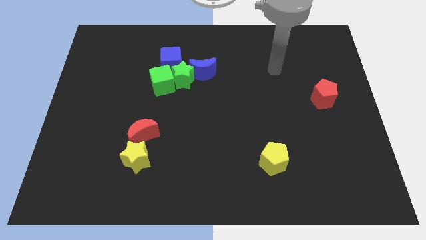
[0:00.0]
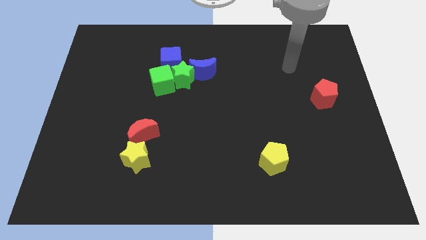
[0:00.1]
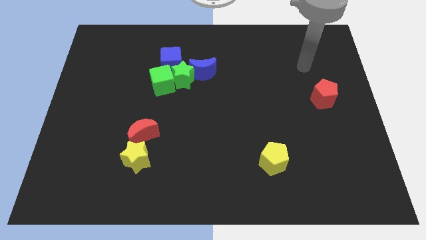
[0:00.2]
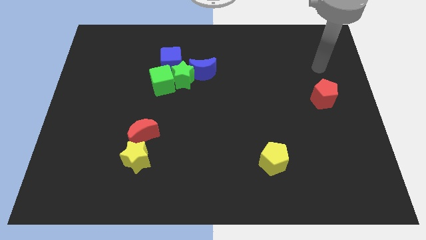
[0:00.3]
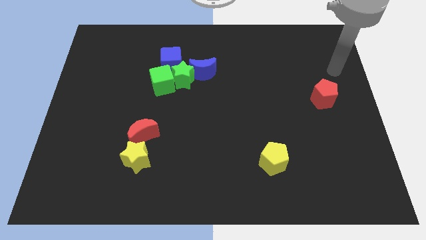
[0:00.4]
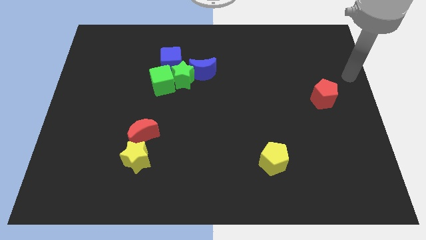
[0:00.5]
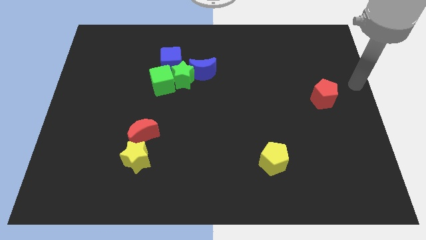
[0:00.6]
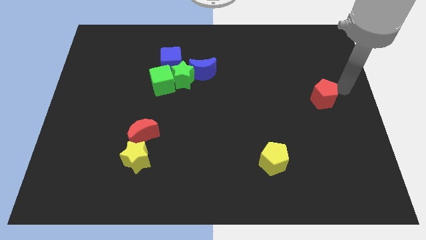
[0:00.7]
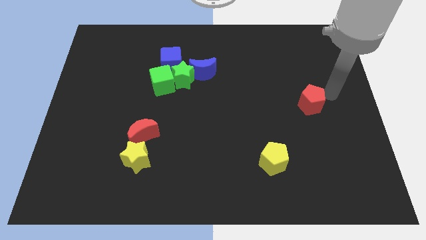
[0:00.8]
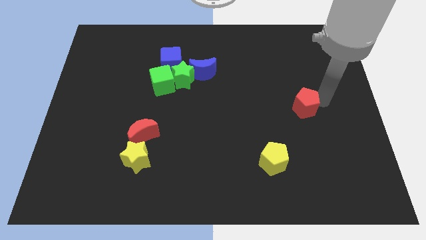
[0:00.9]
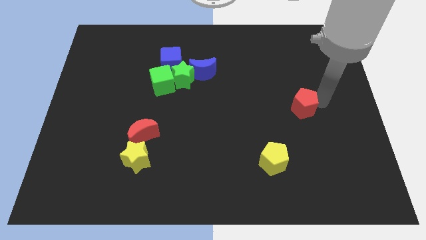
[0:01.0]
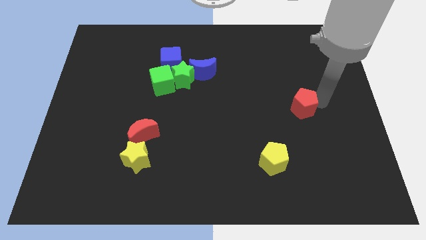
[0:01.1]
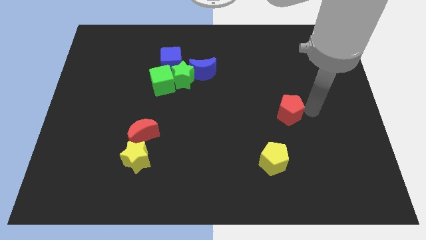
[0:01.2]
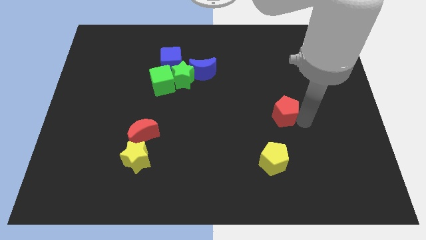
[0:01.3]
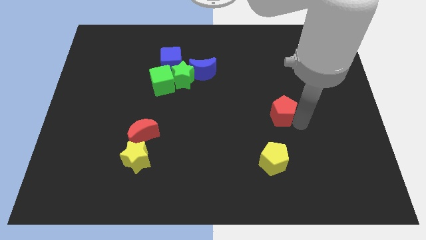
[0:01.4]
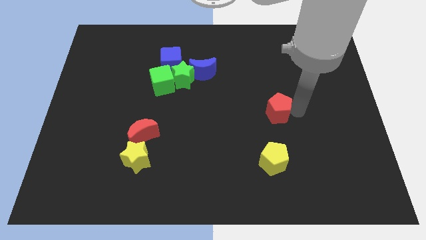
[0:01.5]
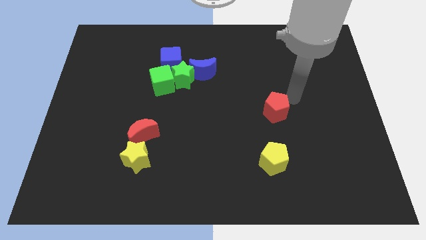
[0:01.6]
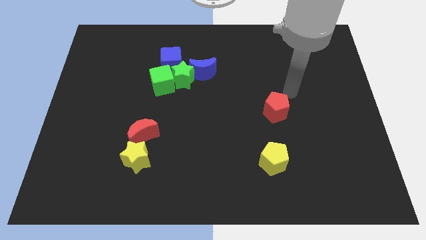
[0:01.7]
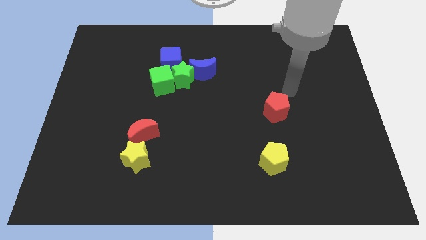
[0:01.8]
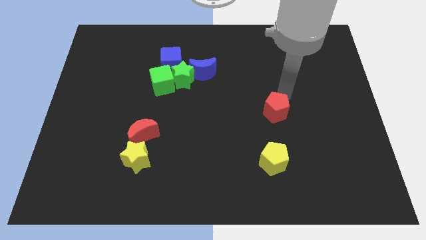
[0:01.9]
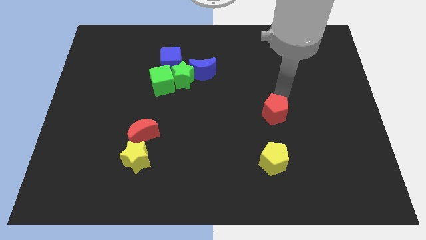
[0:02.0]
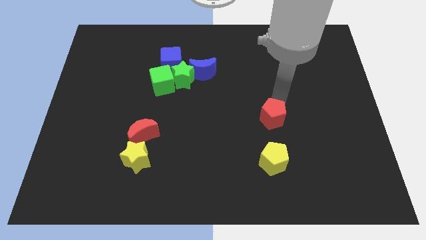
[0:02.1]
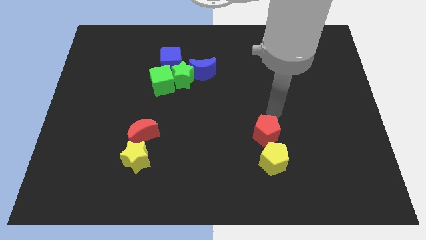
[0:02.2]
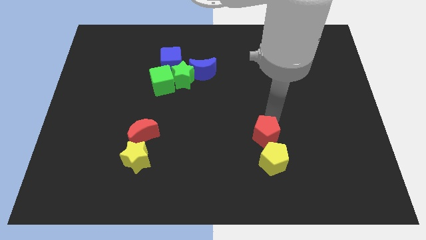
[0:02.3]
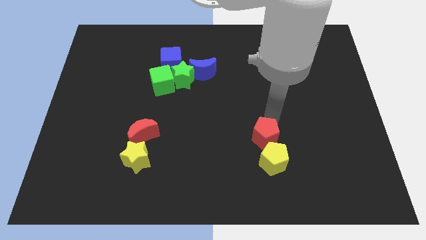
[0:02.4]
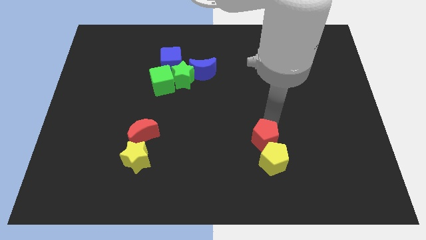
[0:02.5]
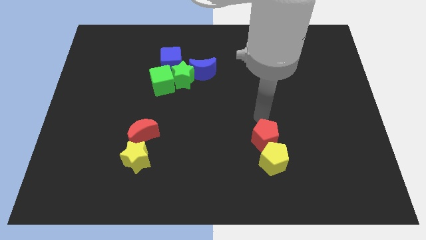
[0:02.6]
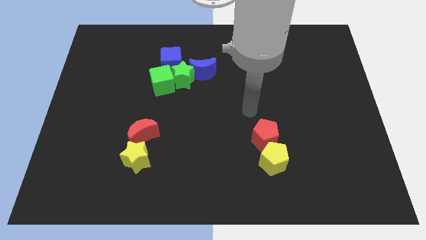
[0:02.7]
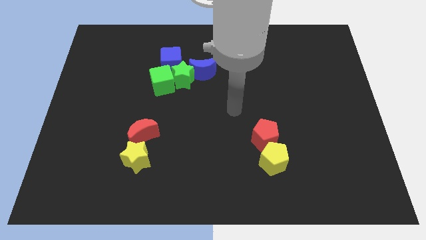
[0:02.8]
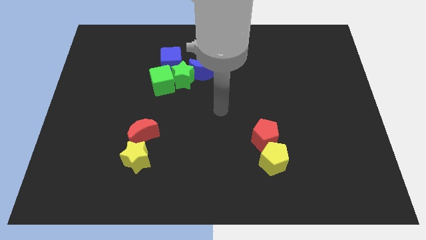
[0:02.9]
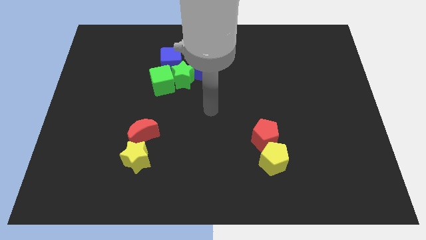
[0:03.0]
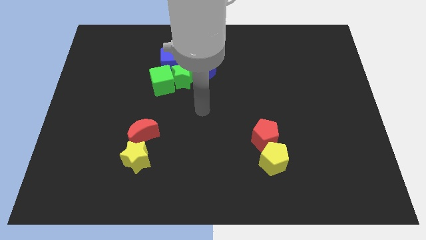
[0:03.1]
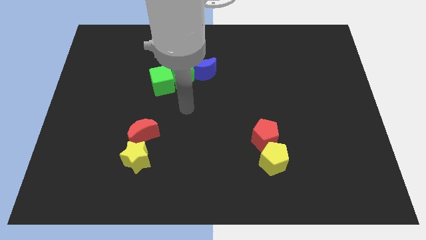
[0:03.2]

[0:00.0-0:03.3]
move the red pentagon to the top of the yellow pentagon

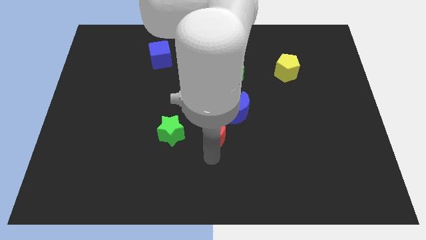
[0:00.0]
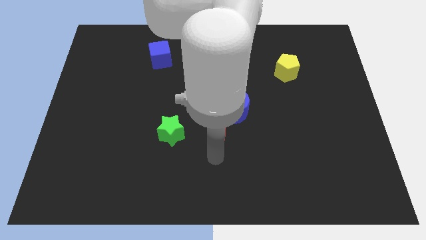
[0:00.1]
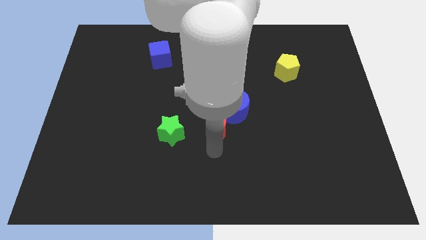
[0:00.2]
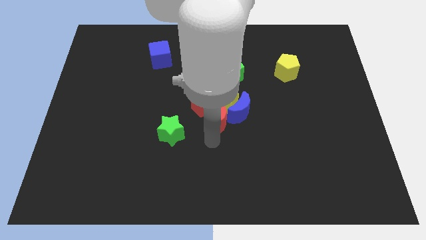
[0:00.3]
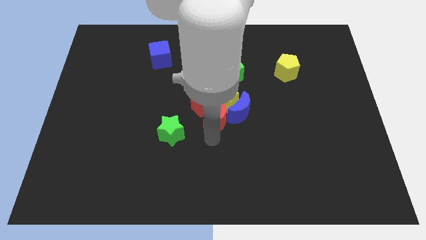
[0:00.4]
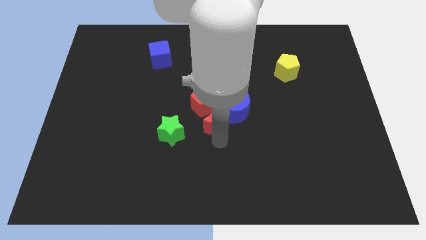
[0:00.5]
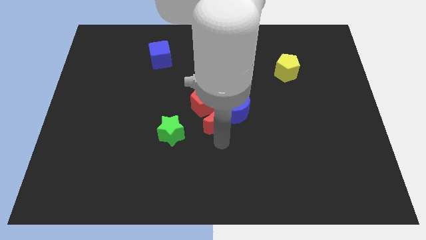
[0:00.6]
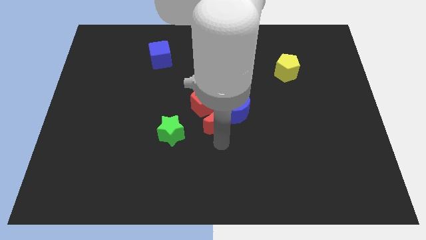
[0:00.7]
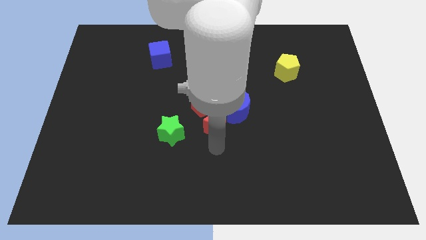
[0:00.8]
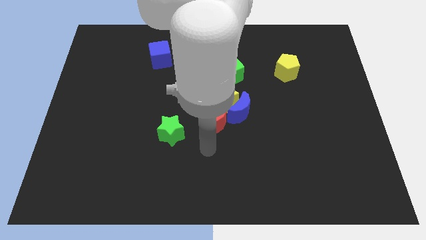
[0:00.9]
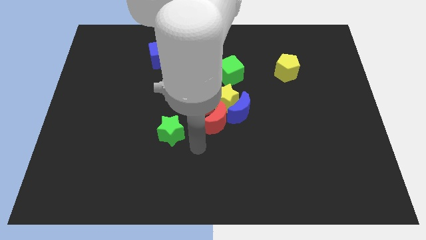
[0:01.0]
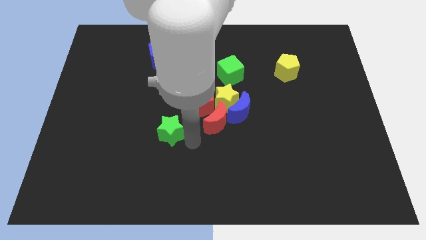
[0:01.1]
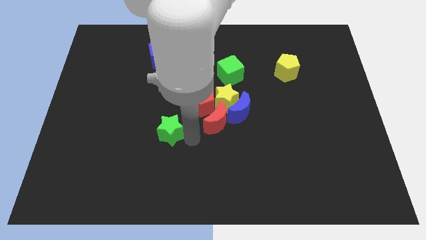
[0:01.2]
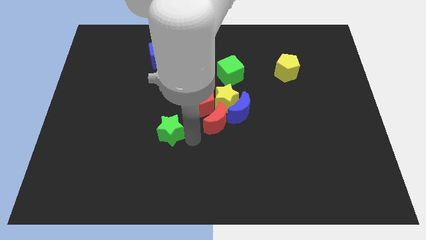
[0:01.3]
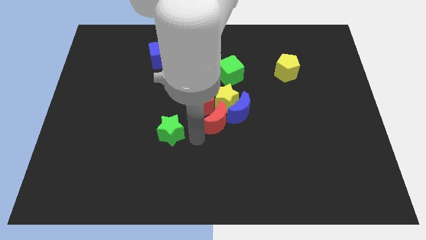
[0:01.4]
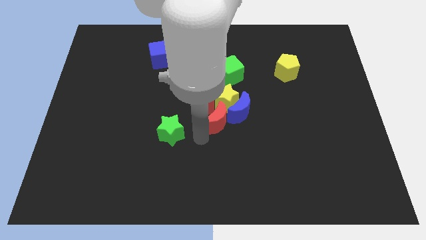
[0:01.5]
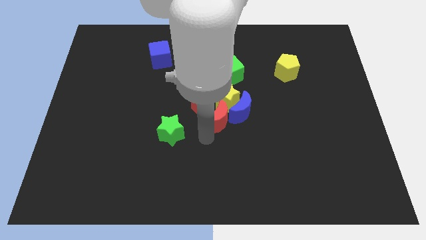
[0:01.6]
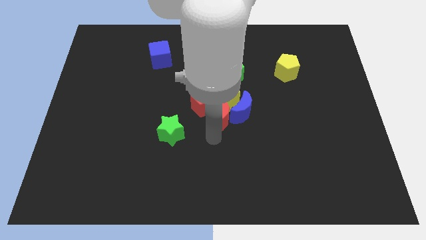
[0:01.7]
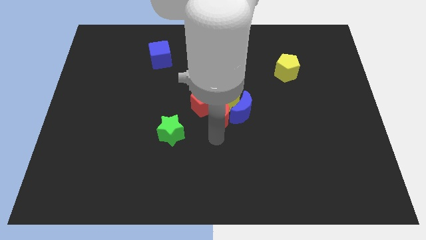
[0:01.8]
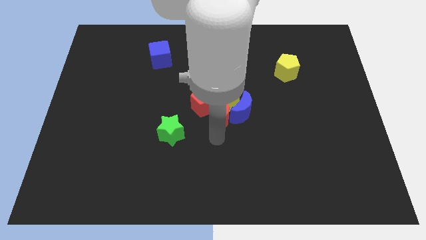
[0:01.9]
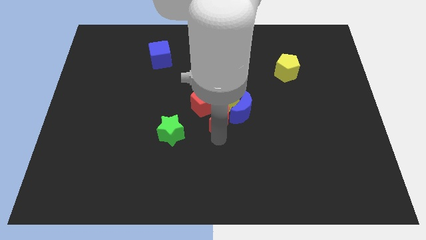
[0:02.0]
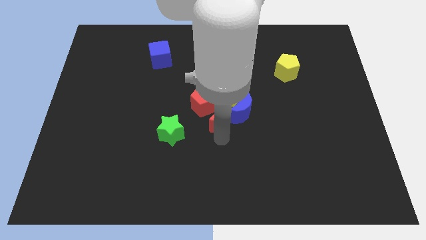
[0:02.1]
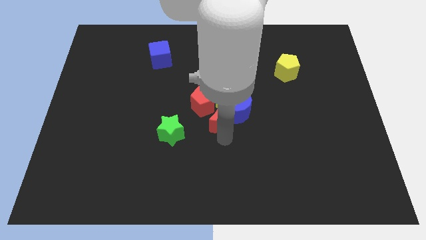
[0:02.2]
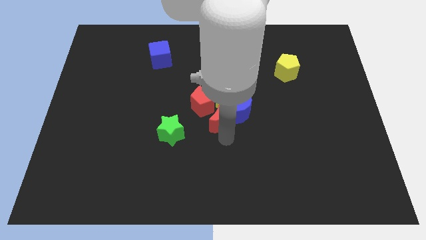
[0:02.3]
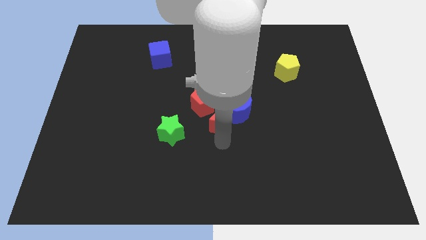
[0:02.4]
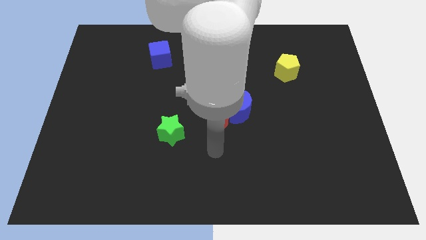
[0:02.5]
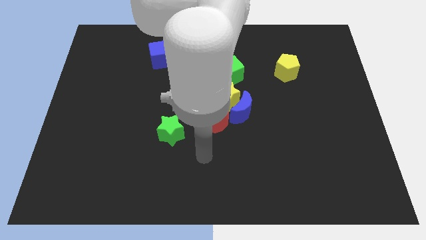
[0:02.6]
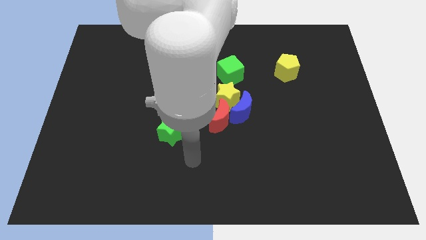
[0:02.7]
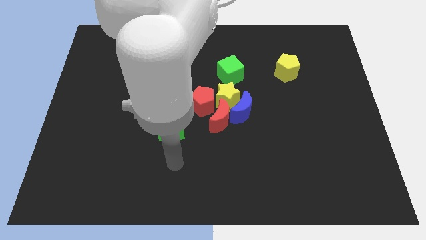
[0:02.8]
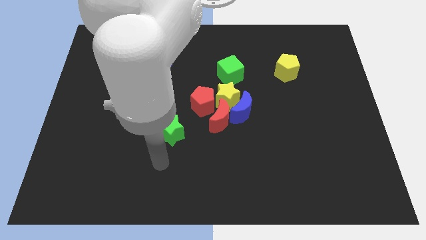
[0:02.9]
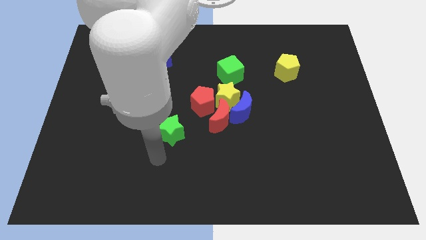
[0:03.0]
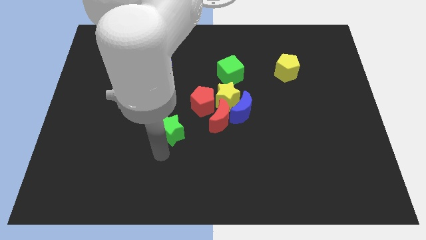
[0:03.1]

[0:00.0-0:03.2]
move the red moon below the red pentagon

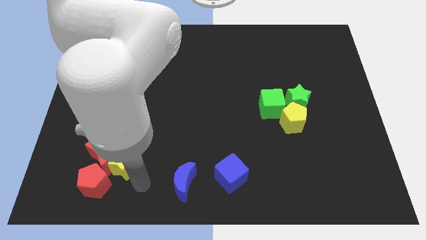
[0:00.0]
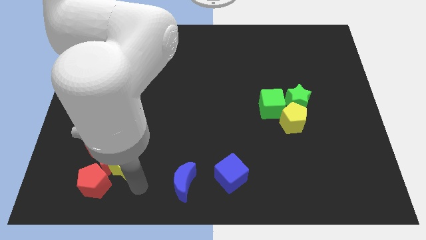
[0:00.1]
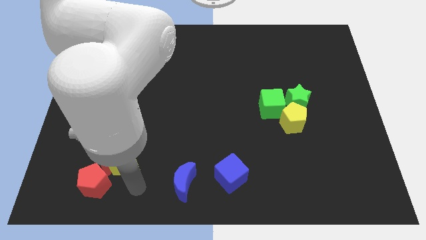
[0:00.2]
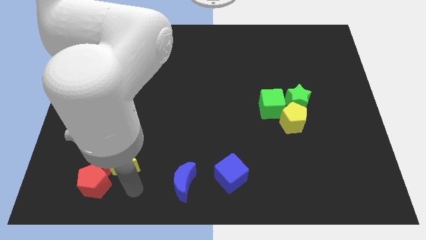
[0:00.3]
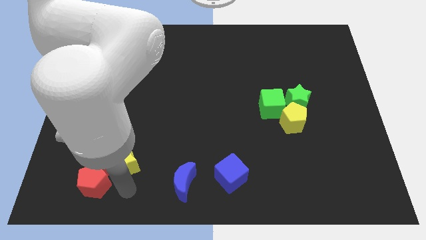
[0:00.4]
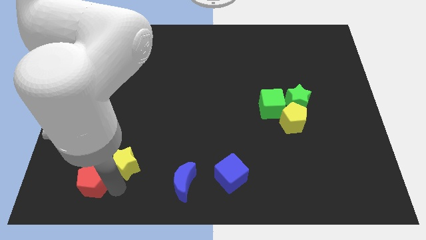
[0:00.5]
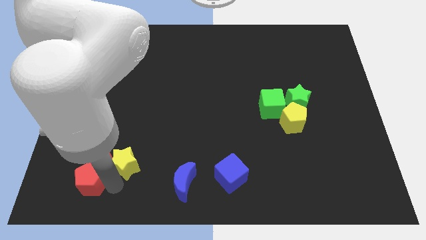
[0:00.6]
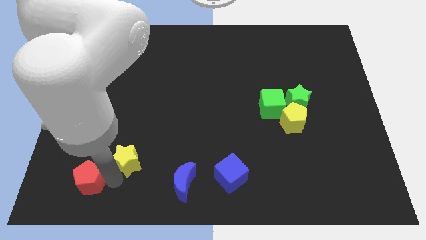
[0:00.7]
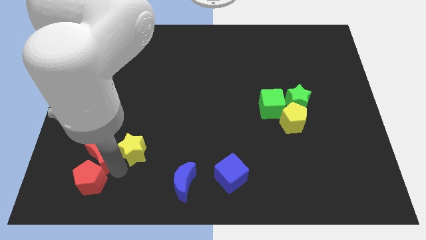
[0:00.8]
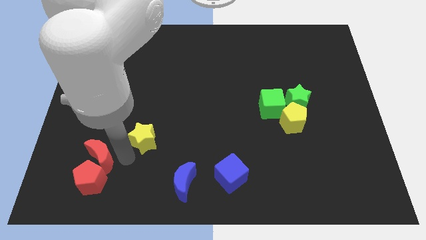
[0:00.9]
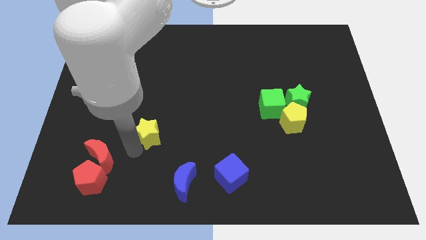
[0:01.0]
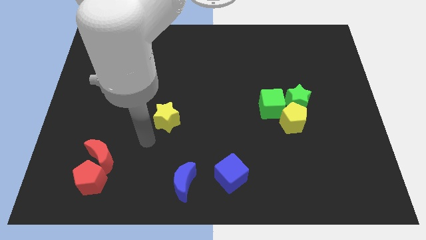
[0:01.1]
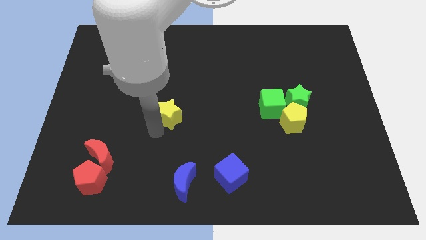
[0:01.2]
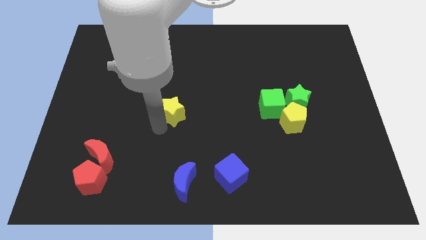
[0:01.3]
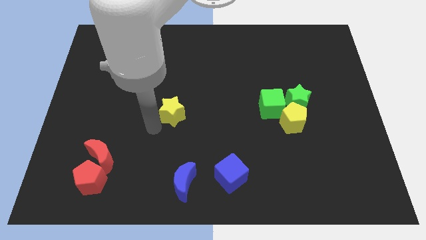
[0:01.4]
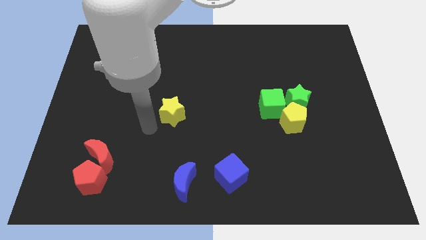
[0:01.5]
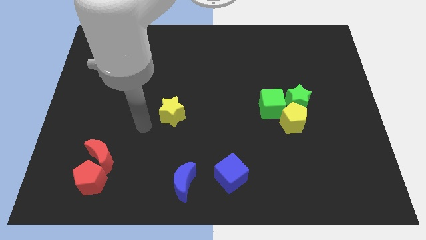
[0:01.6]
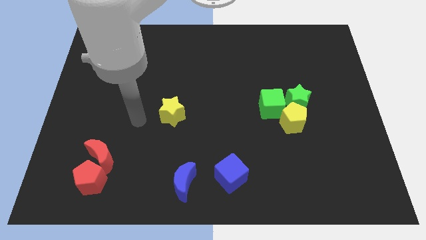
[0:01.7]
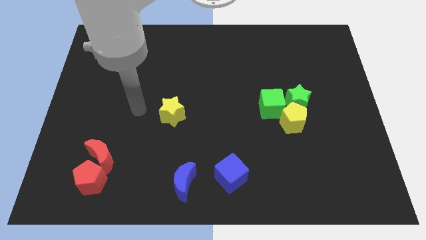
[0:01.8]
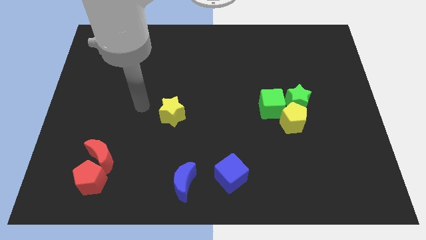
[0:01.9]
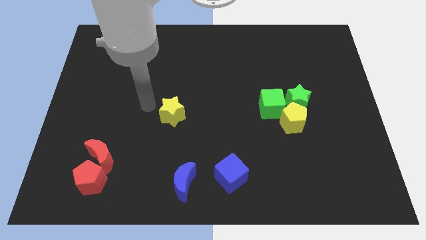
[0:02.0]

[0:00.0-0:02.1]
move the yellow star towards the center

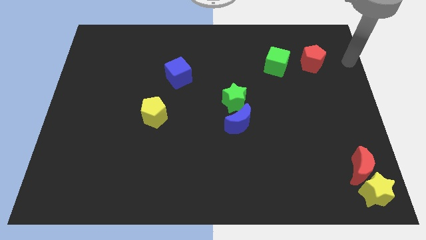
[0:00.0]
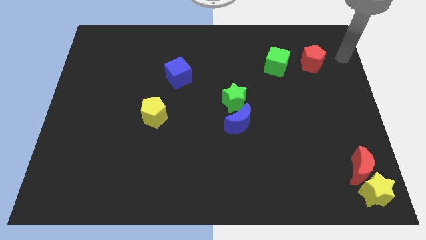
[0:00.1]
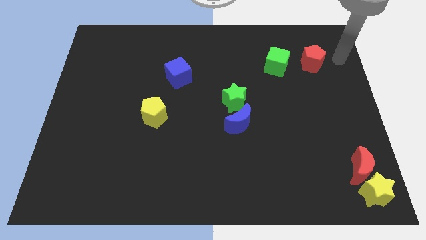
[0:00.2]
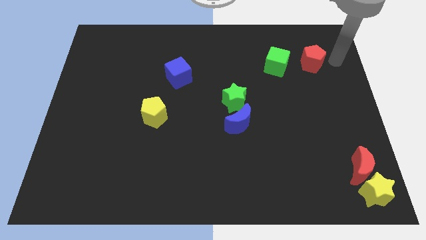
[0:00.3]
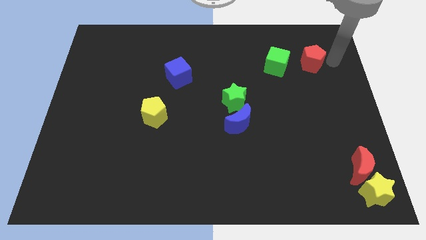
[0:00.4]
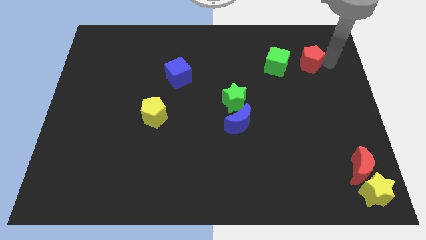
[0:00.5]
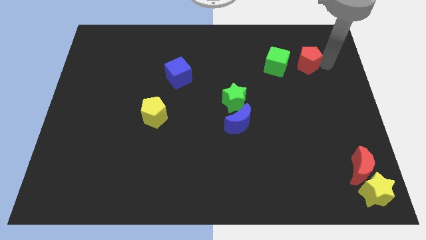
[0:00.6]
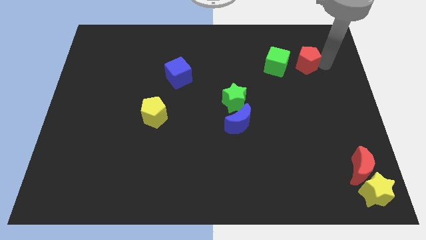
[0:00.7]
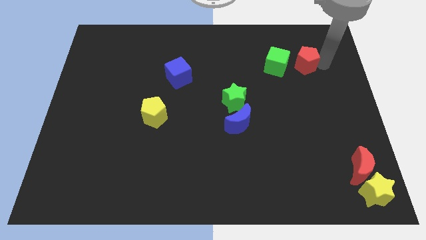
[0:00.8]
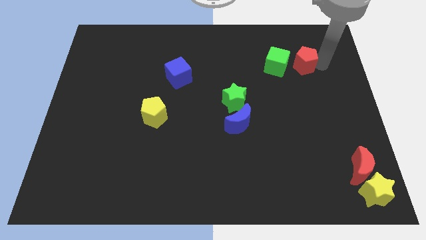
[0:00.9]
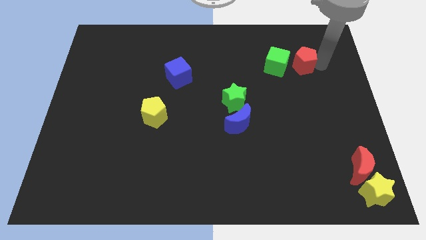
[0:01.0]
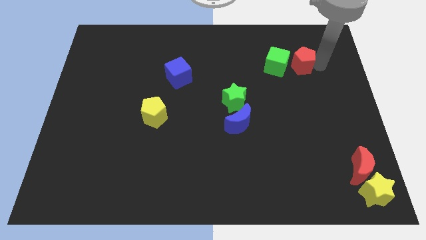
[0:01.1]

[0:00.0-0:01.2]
move red pentagon right the green star
